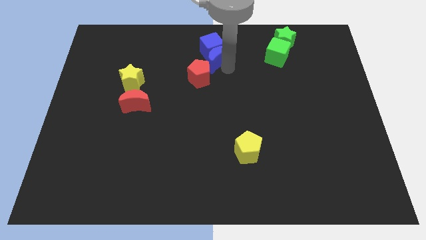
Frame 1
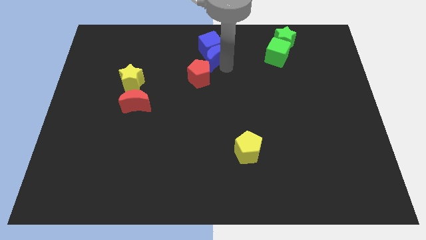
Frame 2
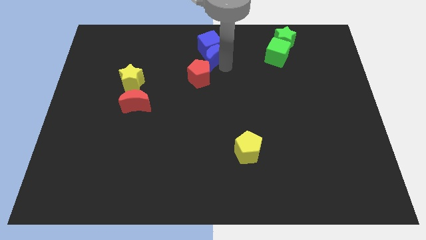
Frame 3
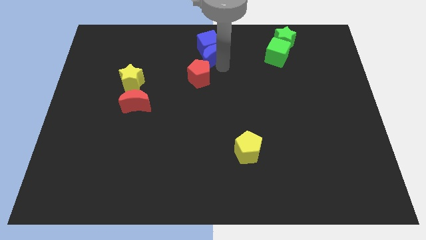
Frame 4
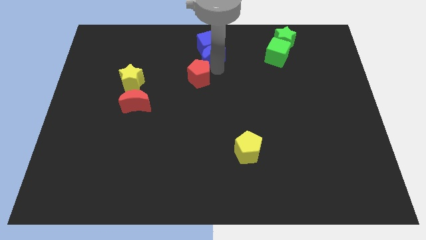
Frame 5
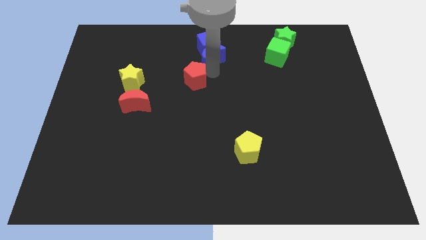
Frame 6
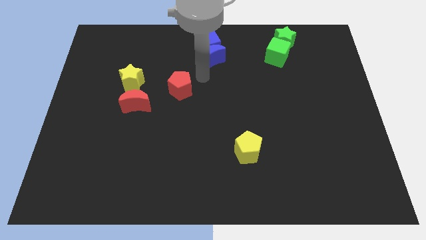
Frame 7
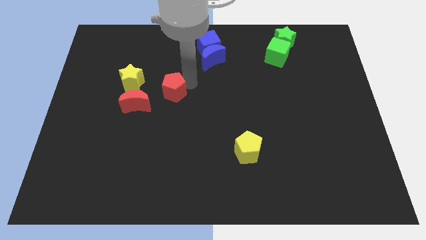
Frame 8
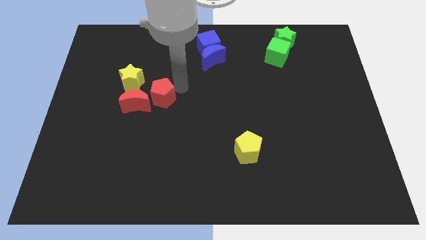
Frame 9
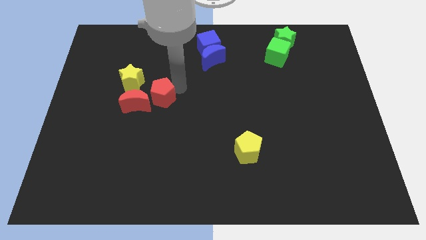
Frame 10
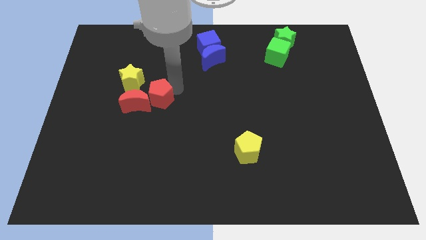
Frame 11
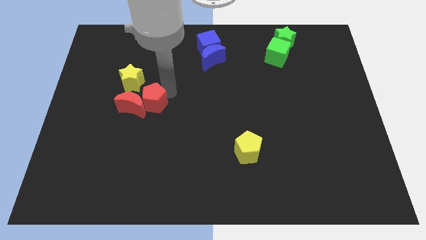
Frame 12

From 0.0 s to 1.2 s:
separate red pentagon and blue moon

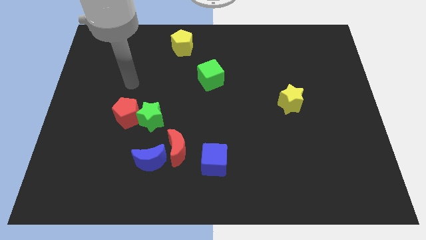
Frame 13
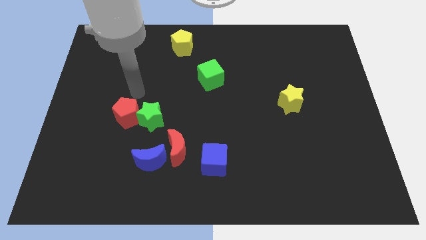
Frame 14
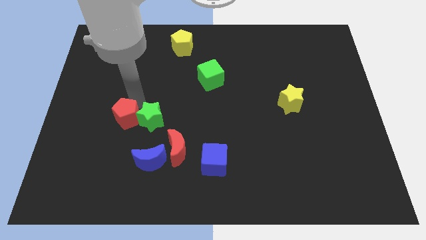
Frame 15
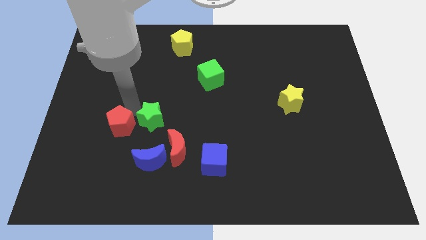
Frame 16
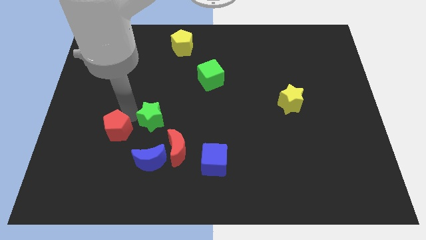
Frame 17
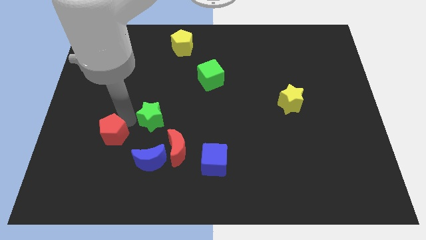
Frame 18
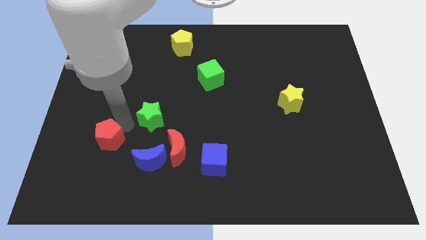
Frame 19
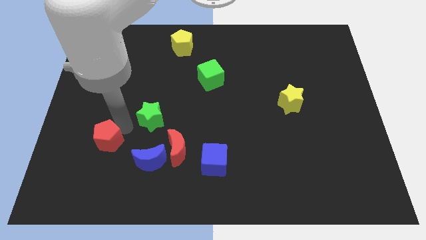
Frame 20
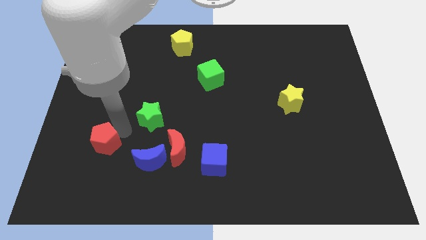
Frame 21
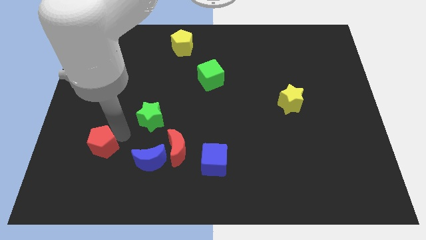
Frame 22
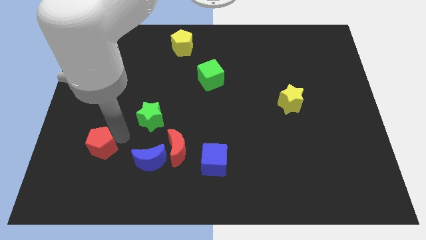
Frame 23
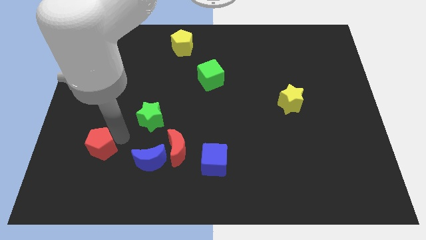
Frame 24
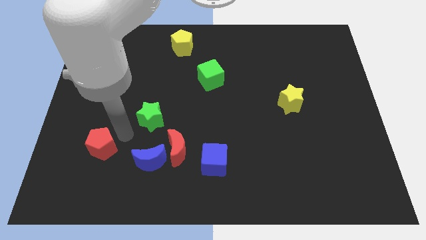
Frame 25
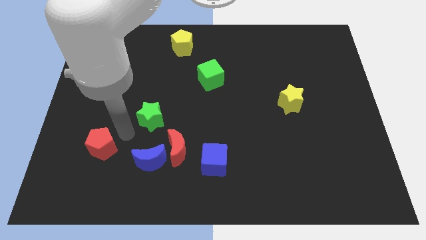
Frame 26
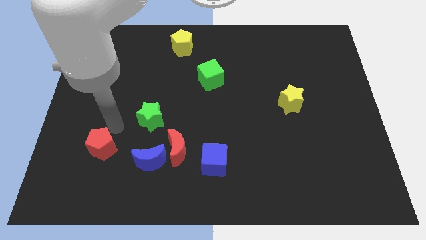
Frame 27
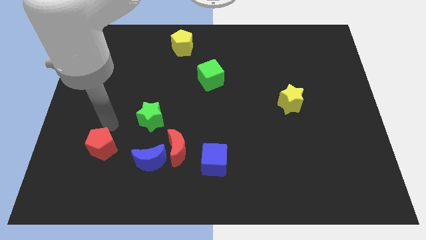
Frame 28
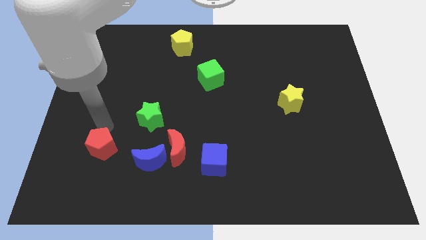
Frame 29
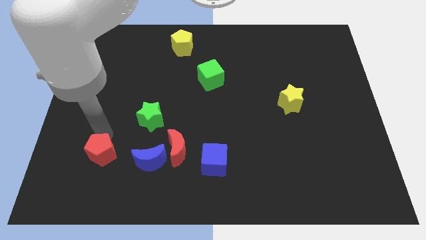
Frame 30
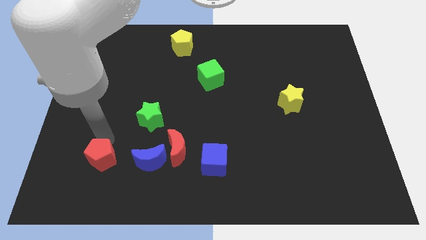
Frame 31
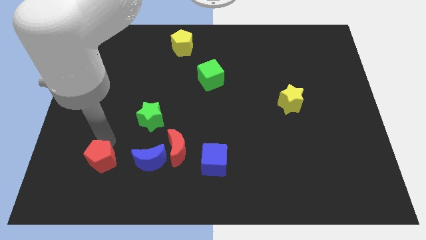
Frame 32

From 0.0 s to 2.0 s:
drag the red pentagon towards bottom

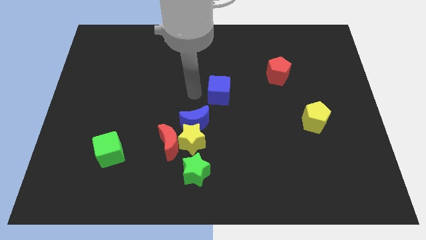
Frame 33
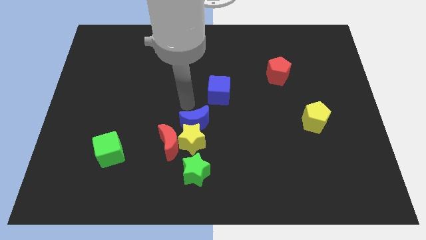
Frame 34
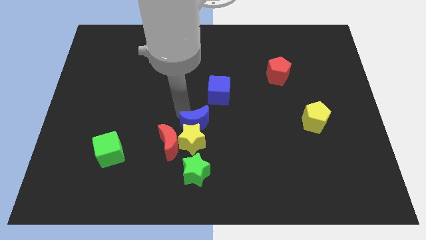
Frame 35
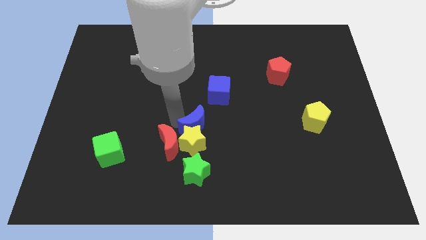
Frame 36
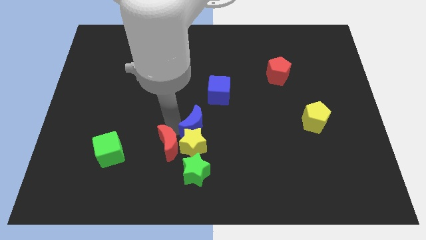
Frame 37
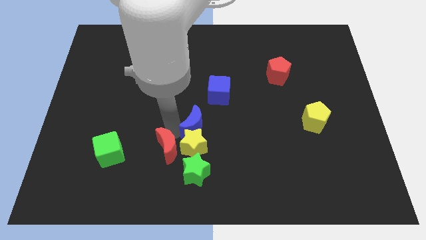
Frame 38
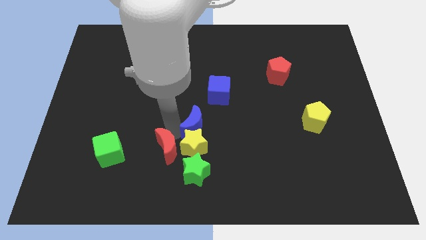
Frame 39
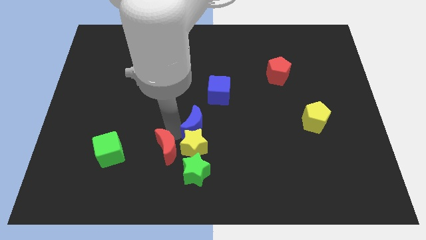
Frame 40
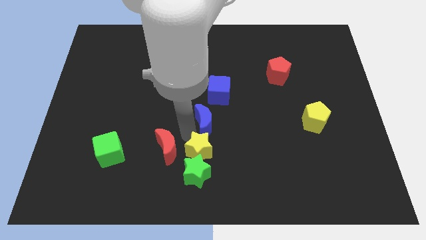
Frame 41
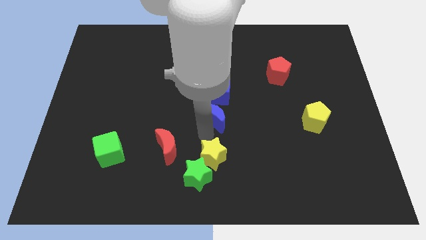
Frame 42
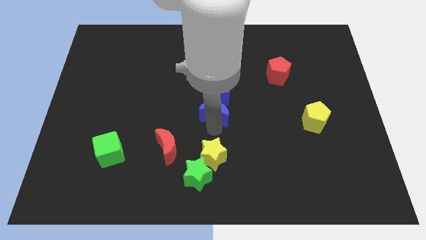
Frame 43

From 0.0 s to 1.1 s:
slightly touch the yellow star

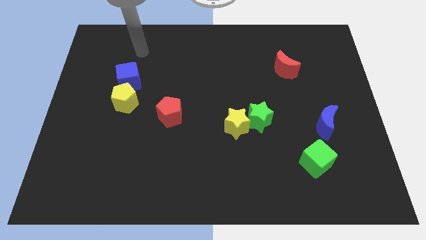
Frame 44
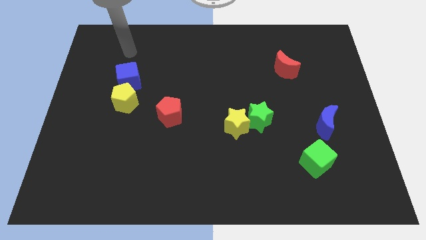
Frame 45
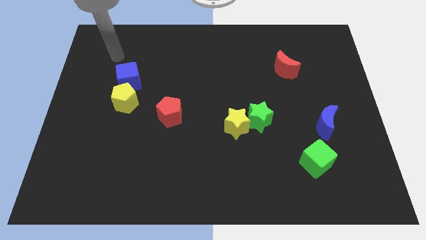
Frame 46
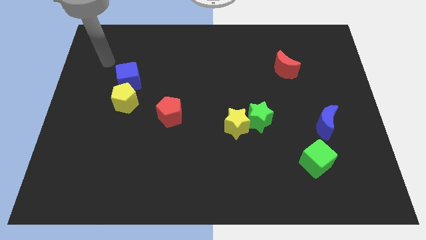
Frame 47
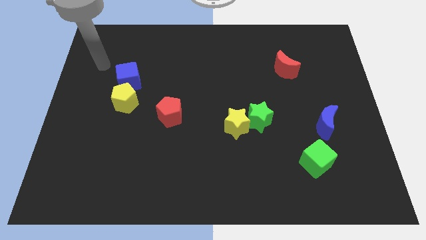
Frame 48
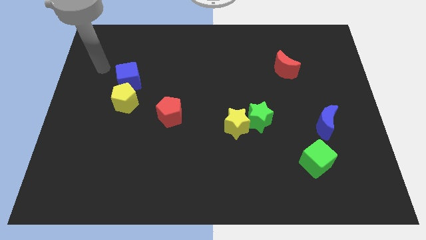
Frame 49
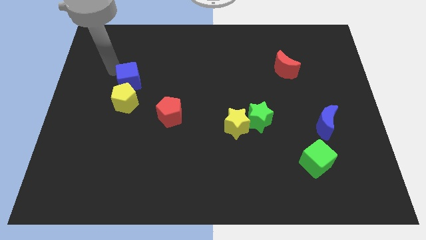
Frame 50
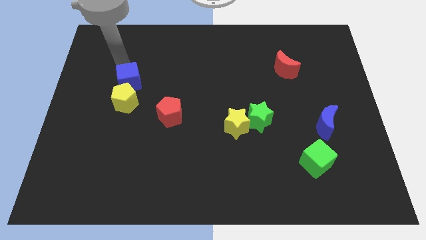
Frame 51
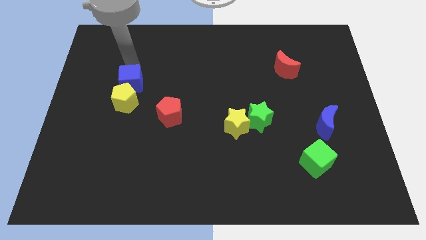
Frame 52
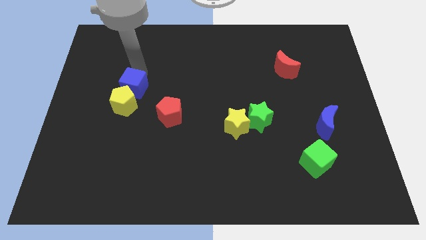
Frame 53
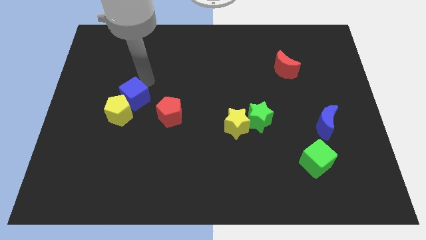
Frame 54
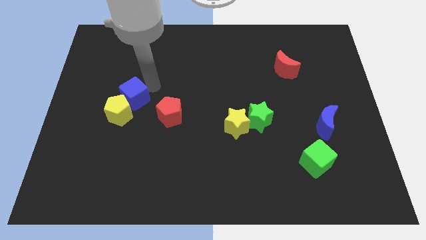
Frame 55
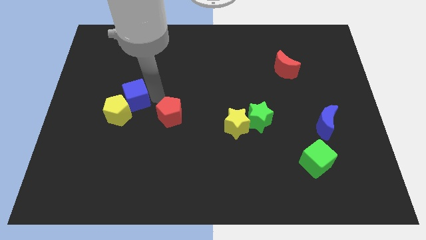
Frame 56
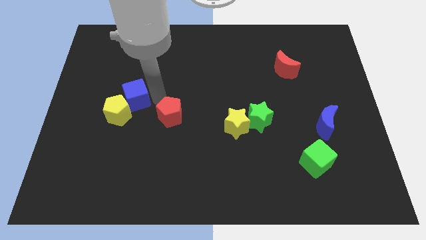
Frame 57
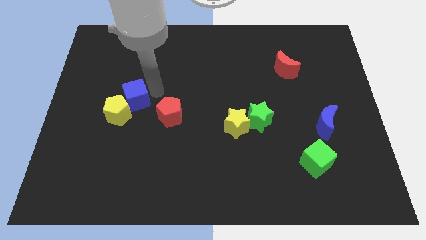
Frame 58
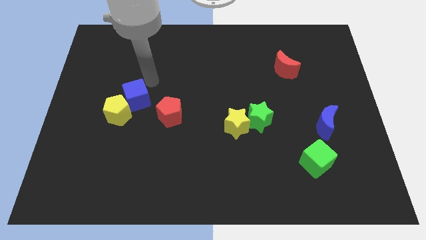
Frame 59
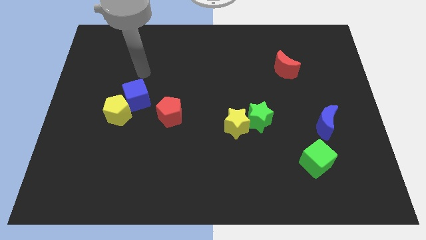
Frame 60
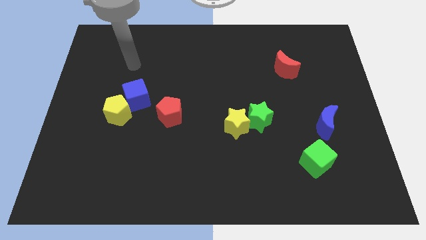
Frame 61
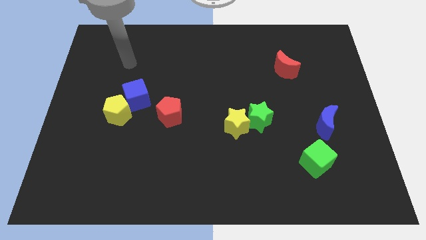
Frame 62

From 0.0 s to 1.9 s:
push the blue cud towards the red pentagon

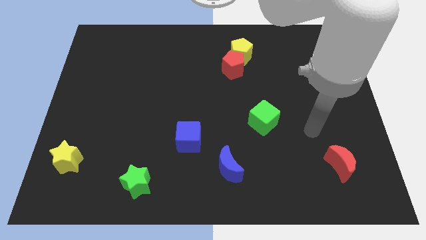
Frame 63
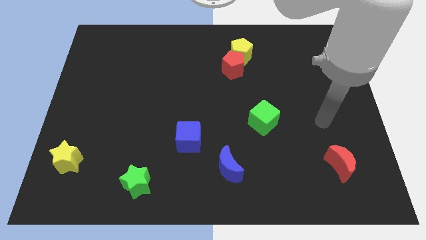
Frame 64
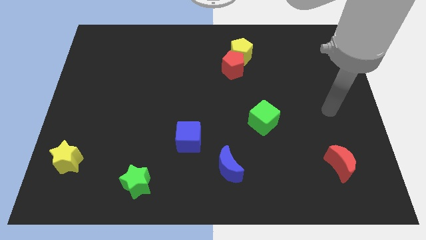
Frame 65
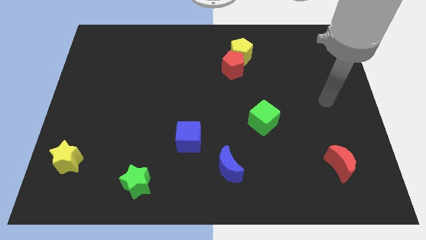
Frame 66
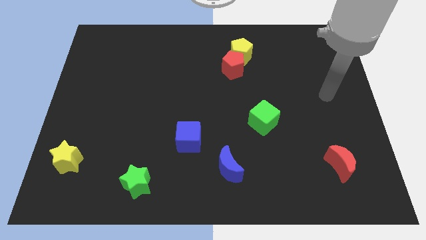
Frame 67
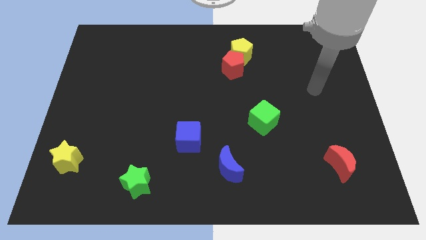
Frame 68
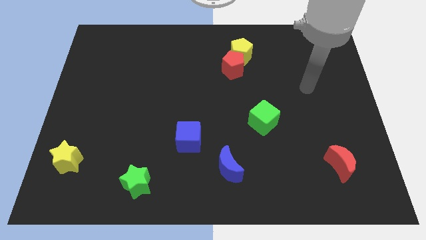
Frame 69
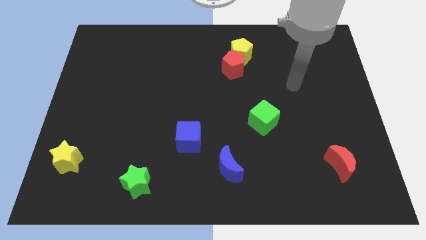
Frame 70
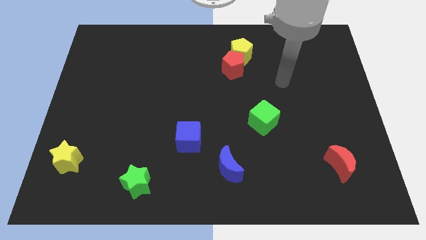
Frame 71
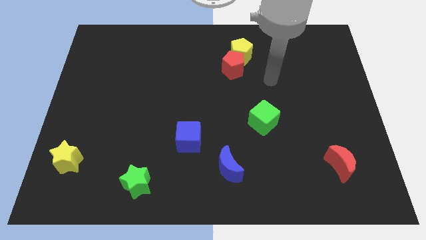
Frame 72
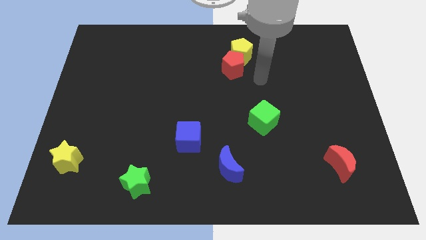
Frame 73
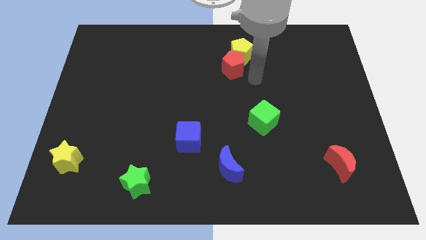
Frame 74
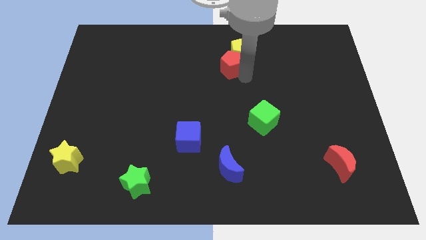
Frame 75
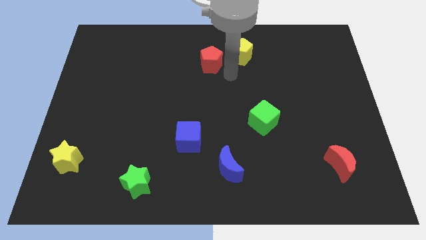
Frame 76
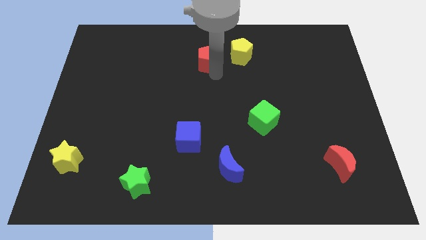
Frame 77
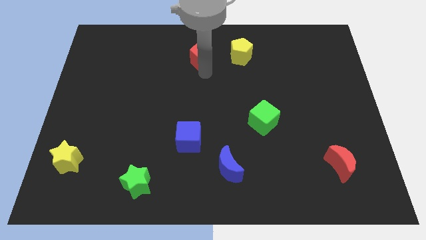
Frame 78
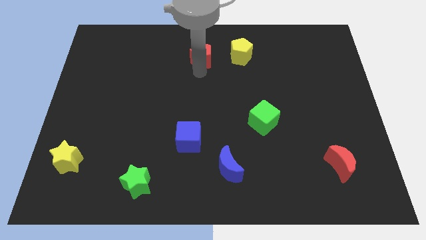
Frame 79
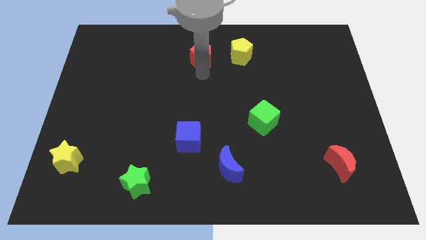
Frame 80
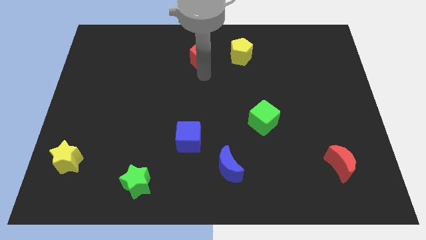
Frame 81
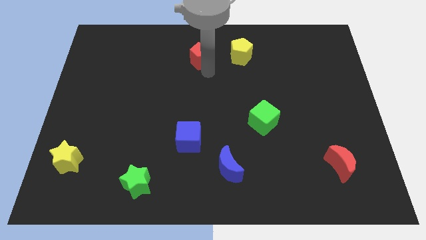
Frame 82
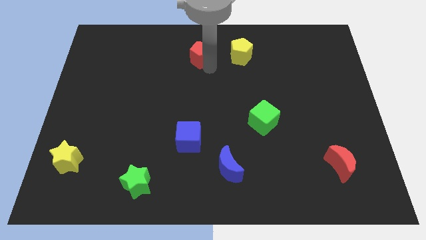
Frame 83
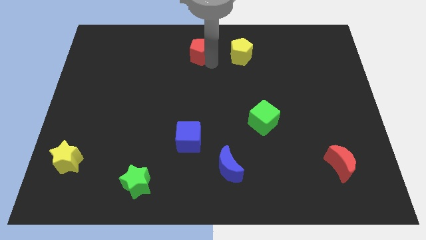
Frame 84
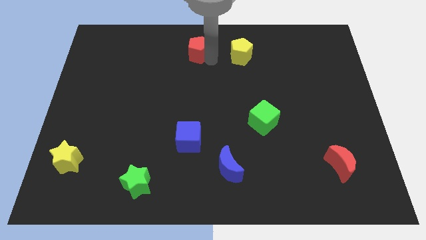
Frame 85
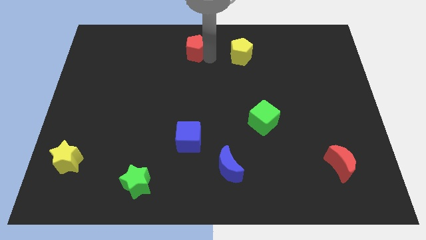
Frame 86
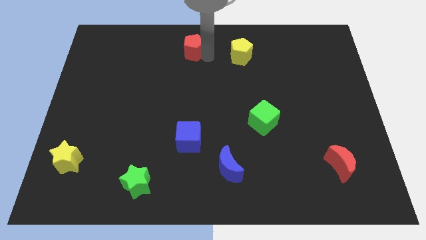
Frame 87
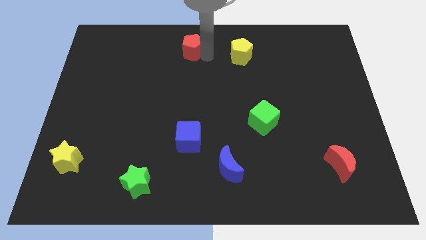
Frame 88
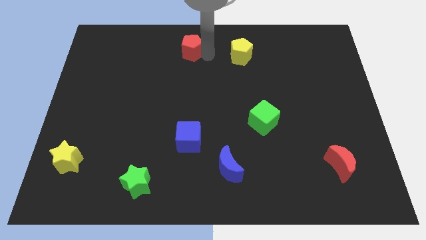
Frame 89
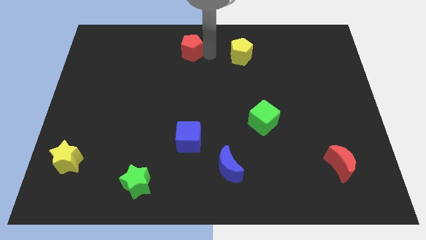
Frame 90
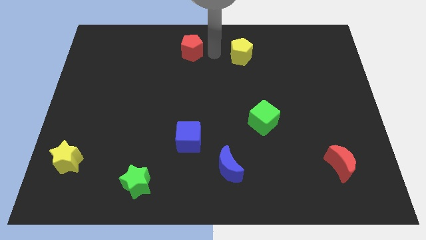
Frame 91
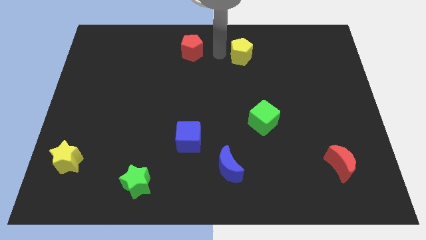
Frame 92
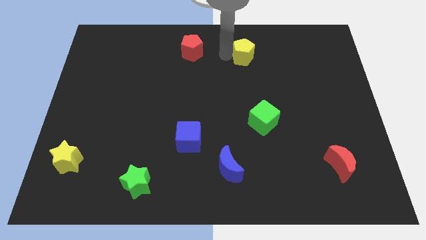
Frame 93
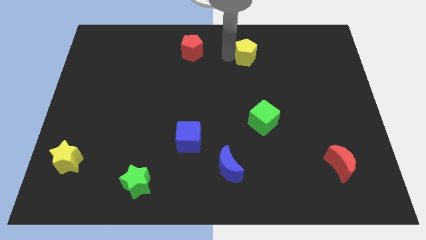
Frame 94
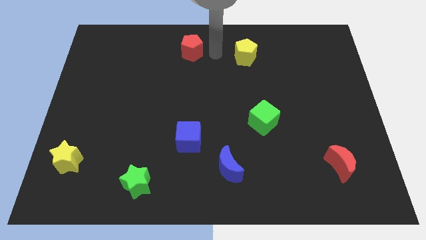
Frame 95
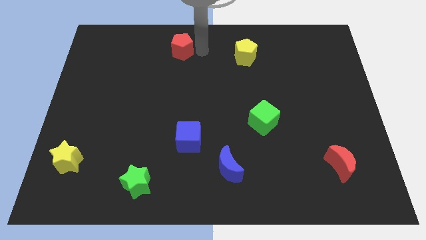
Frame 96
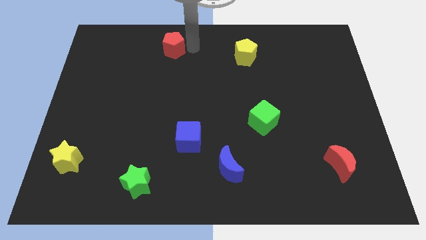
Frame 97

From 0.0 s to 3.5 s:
move the red penatgon towards the top left side
